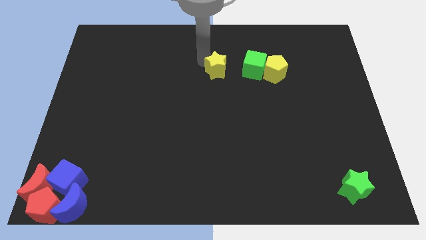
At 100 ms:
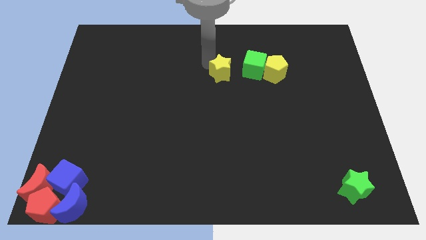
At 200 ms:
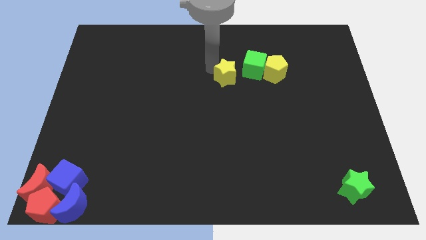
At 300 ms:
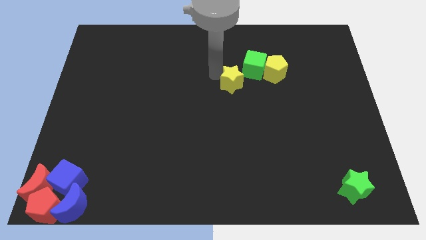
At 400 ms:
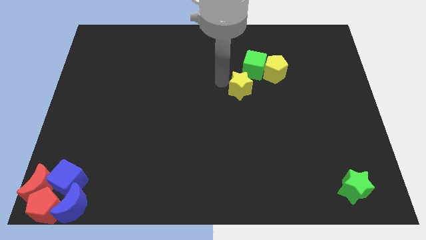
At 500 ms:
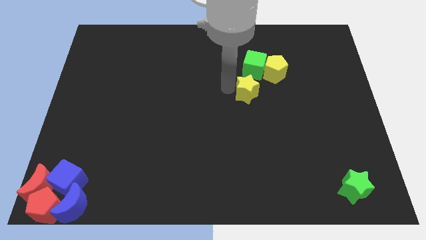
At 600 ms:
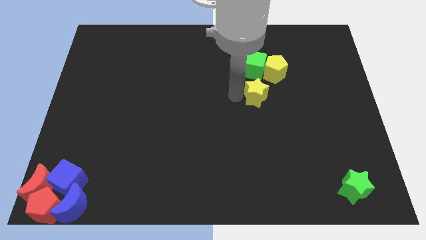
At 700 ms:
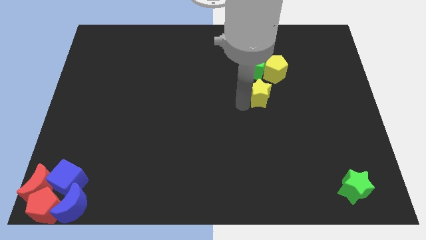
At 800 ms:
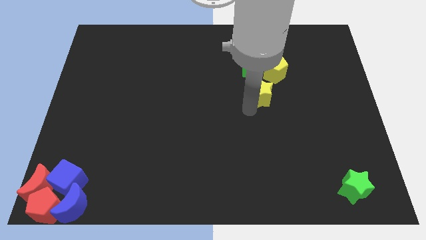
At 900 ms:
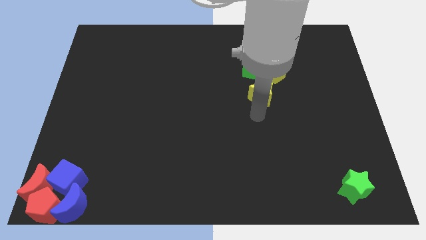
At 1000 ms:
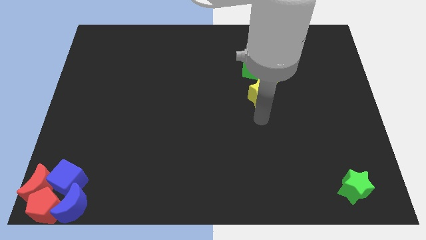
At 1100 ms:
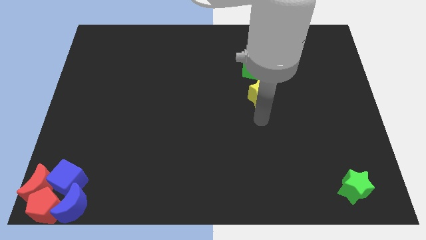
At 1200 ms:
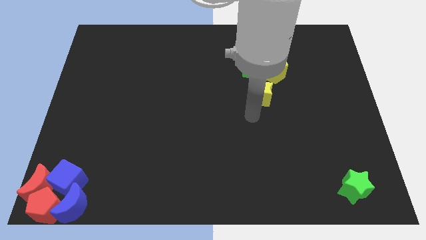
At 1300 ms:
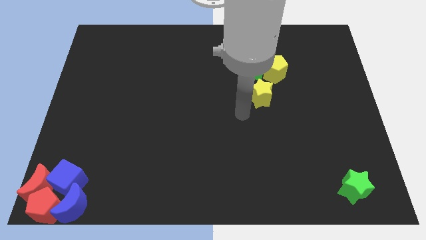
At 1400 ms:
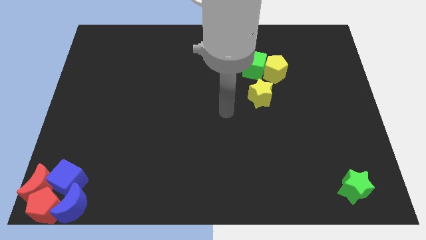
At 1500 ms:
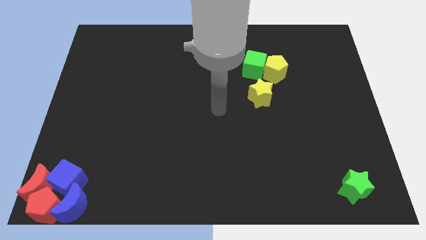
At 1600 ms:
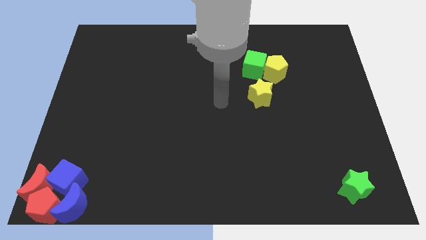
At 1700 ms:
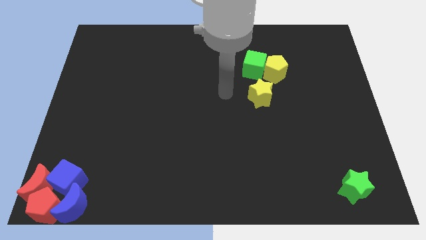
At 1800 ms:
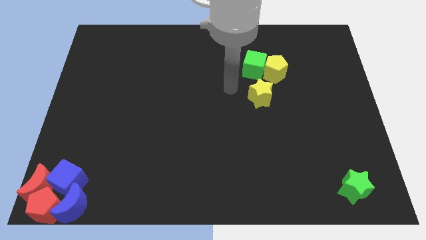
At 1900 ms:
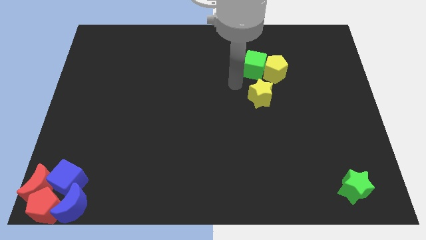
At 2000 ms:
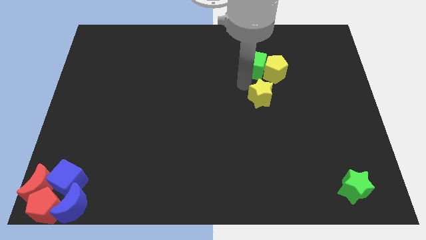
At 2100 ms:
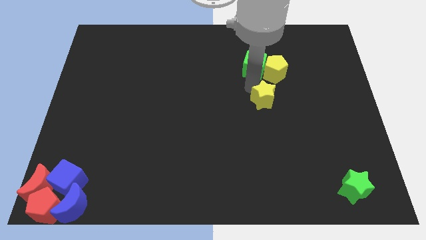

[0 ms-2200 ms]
push the yellow star to the bottom of the board

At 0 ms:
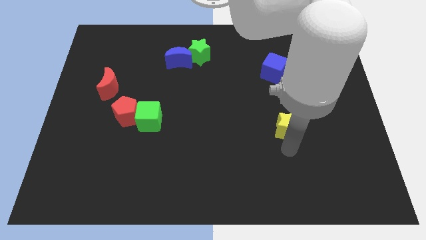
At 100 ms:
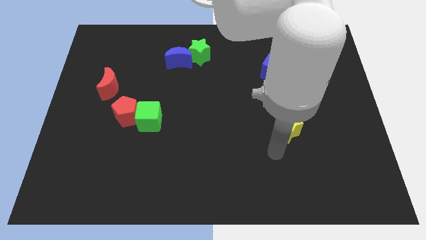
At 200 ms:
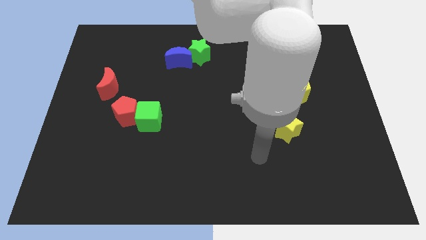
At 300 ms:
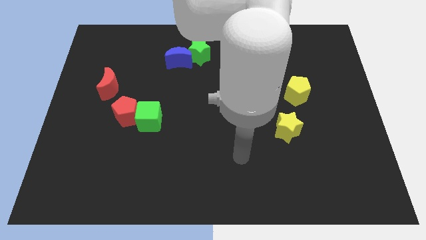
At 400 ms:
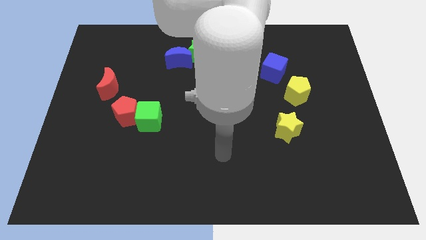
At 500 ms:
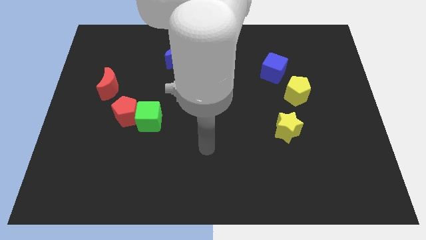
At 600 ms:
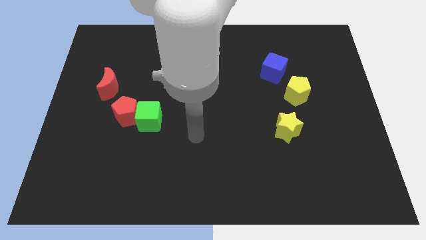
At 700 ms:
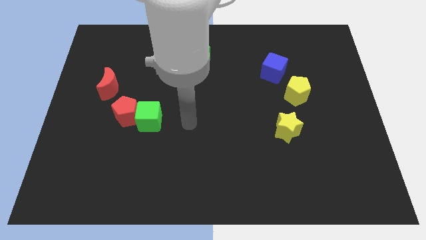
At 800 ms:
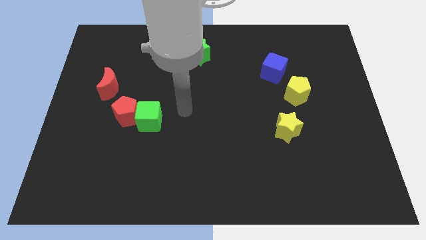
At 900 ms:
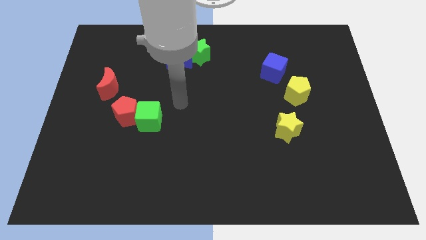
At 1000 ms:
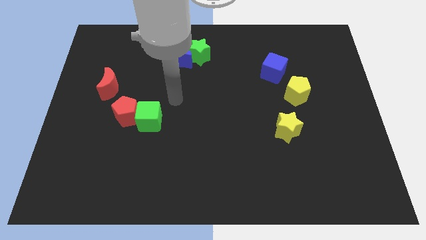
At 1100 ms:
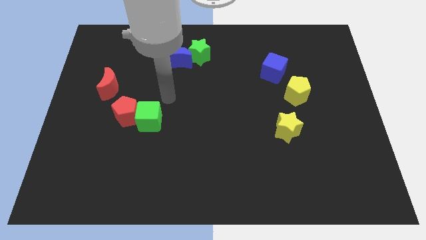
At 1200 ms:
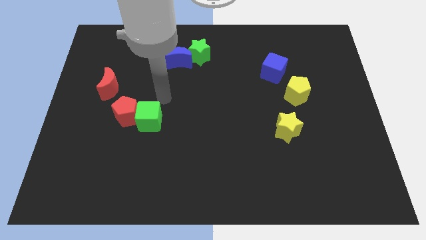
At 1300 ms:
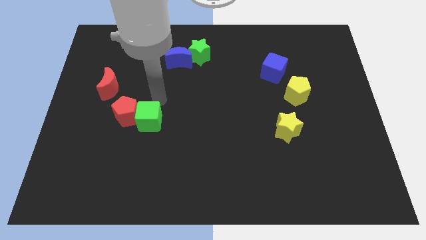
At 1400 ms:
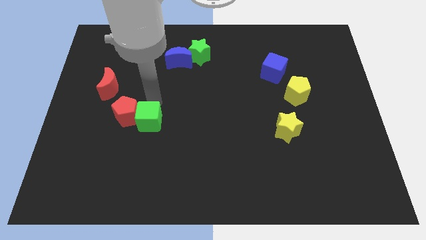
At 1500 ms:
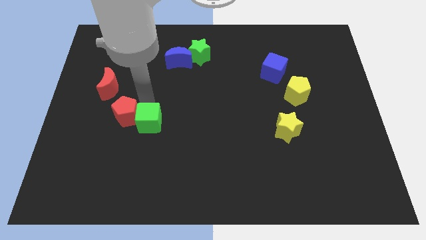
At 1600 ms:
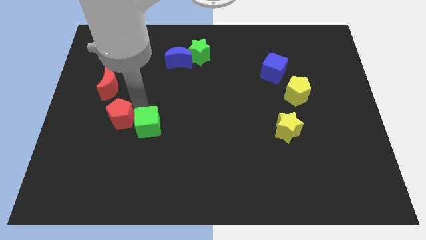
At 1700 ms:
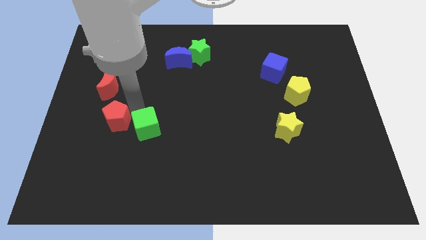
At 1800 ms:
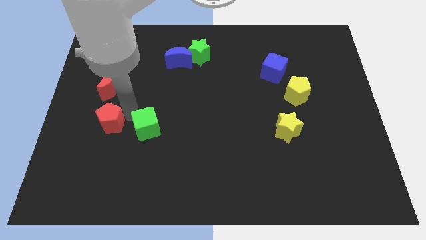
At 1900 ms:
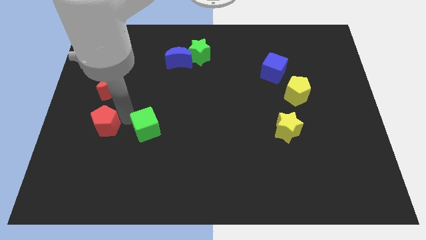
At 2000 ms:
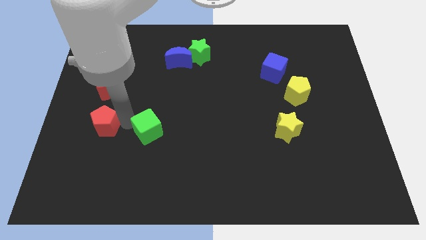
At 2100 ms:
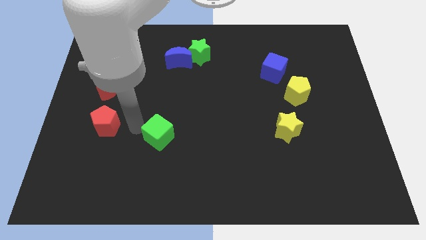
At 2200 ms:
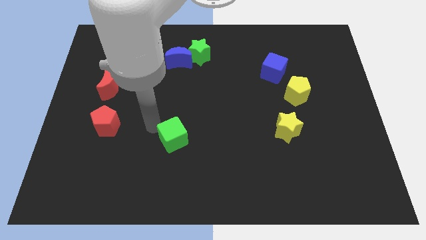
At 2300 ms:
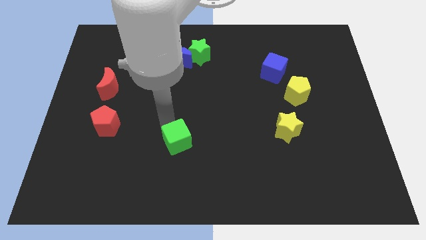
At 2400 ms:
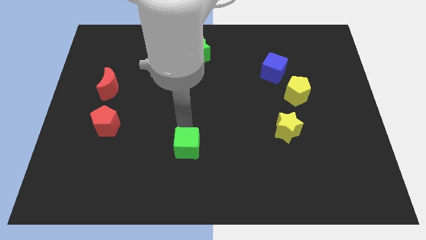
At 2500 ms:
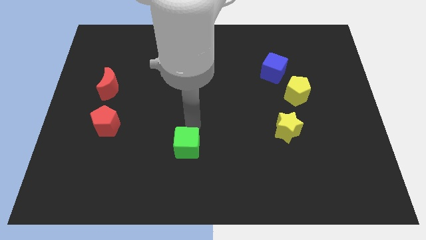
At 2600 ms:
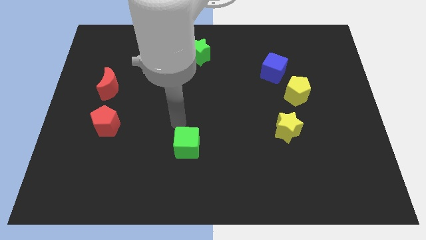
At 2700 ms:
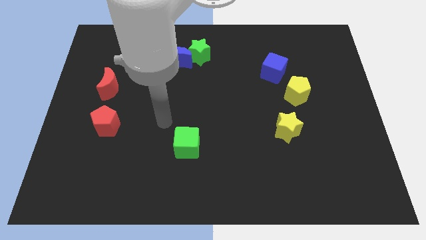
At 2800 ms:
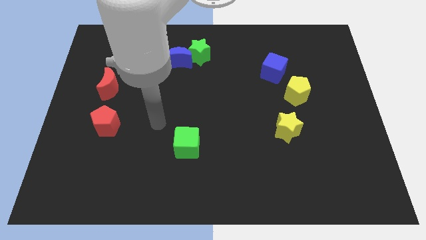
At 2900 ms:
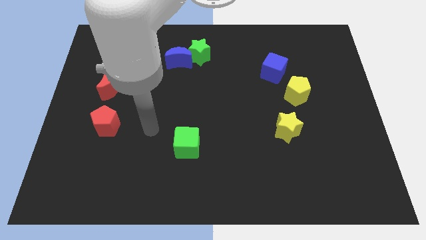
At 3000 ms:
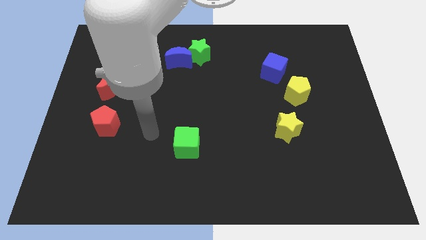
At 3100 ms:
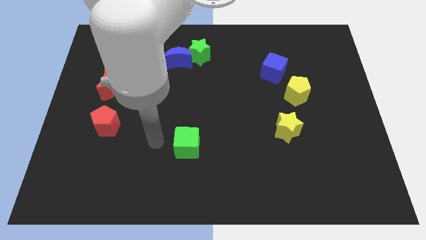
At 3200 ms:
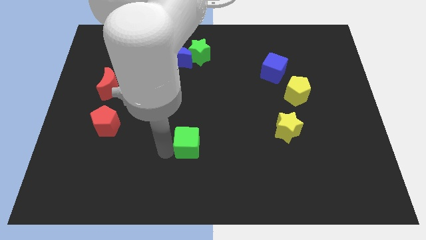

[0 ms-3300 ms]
place the green cube at the bottom side of the blue crescent and the green star

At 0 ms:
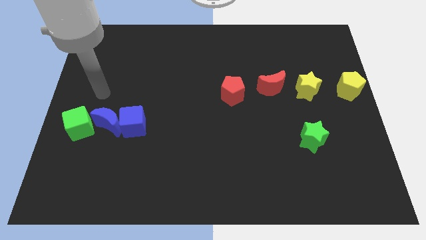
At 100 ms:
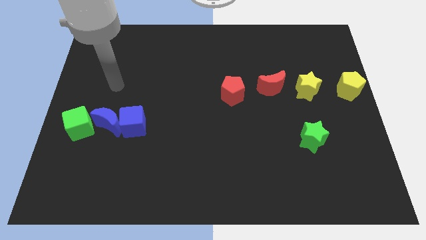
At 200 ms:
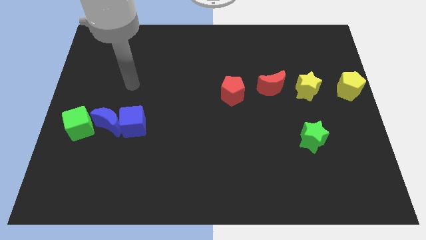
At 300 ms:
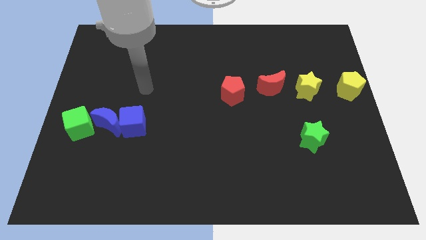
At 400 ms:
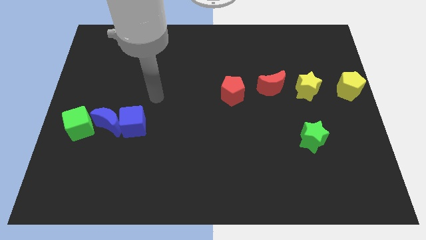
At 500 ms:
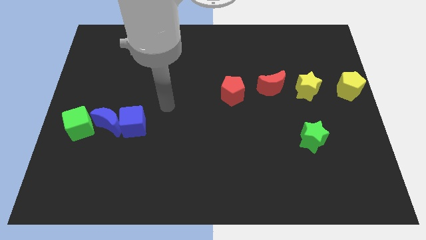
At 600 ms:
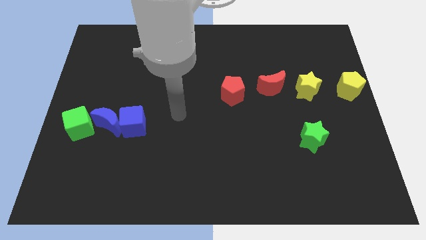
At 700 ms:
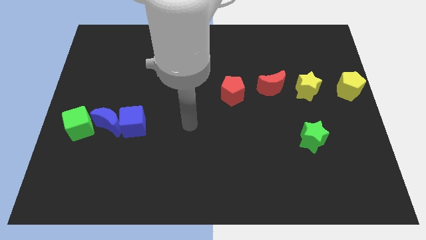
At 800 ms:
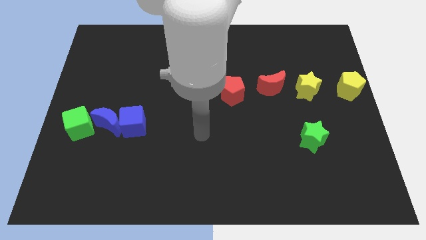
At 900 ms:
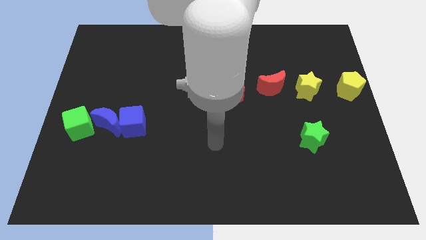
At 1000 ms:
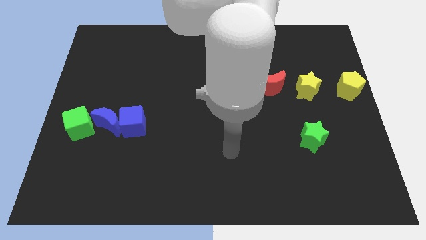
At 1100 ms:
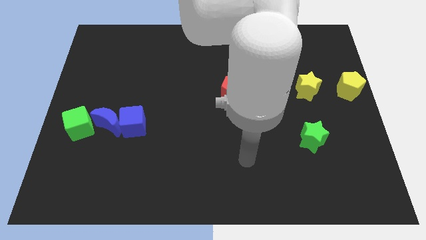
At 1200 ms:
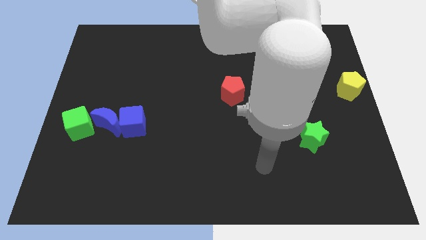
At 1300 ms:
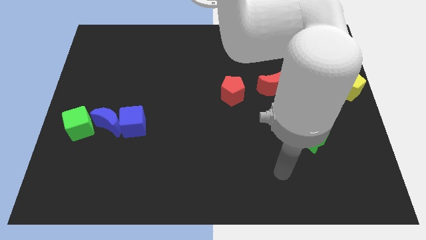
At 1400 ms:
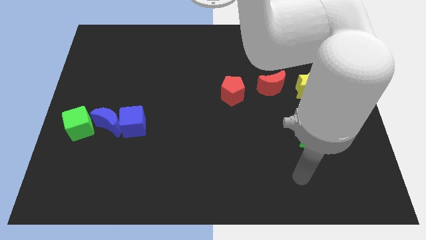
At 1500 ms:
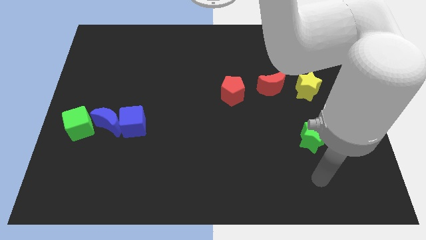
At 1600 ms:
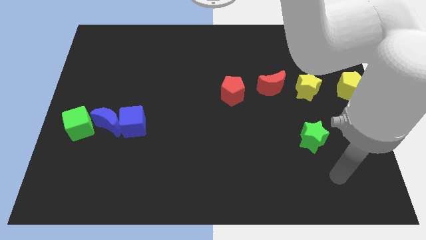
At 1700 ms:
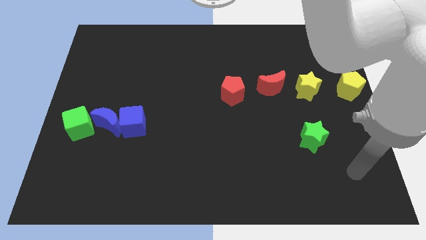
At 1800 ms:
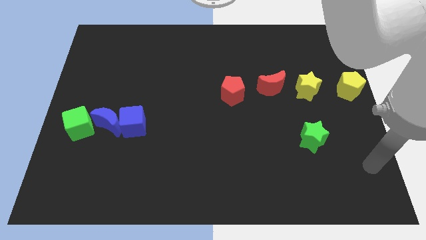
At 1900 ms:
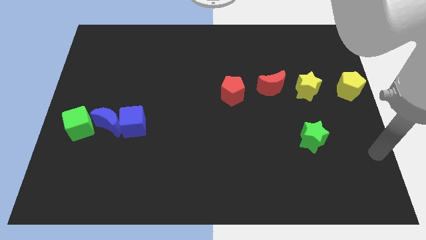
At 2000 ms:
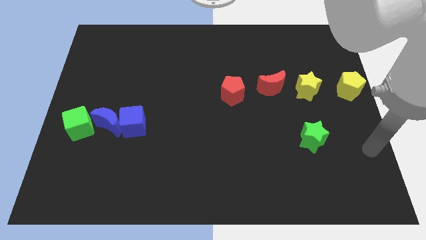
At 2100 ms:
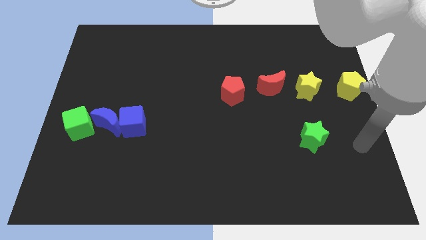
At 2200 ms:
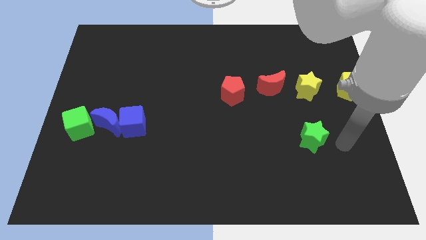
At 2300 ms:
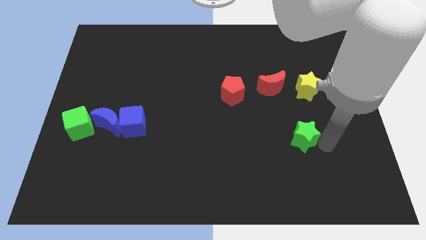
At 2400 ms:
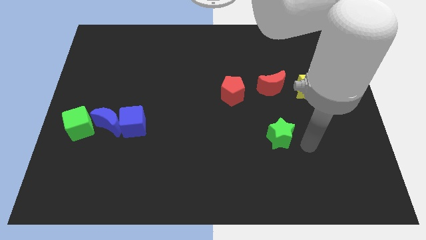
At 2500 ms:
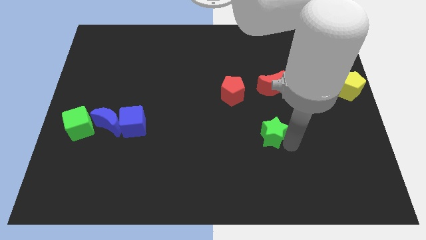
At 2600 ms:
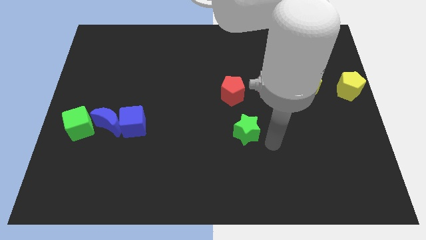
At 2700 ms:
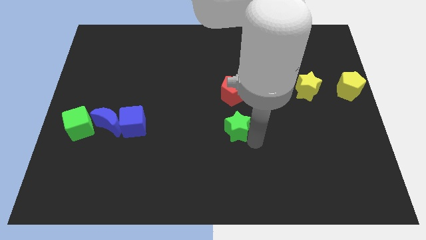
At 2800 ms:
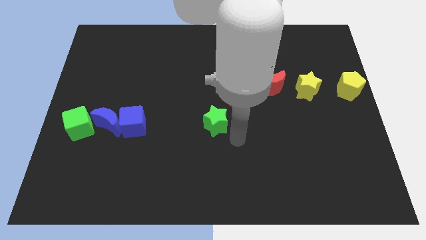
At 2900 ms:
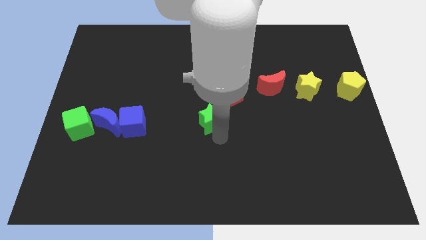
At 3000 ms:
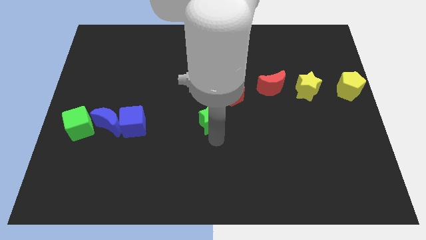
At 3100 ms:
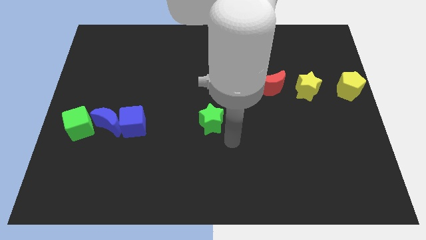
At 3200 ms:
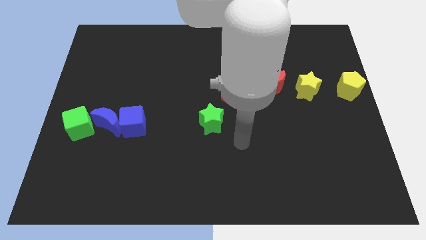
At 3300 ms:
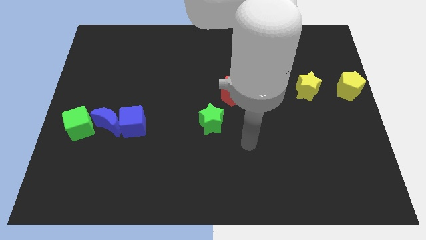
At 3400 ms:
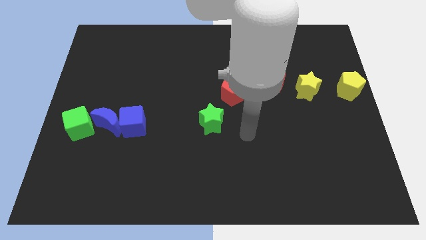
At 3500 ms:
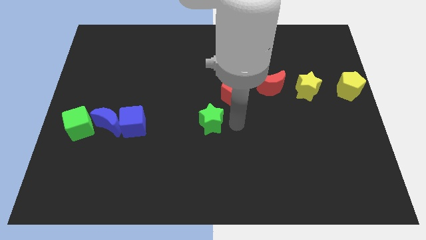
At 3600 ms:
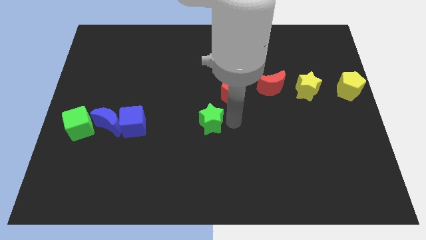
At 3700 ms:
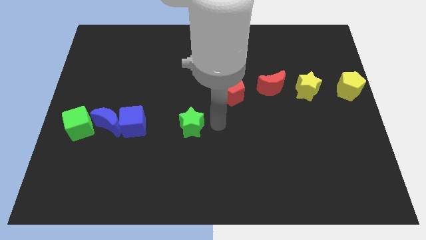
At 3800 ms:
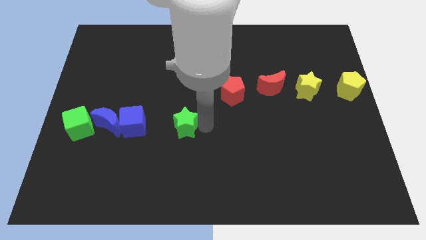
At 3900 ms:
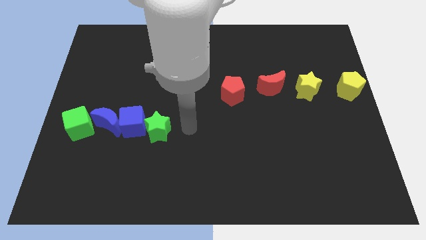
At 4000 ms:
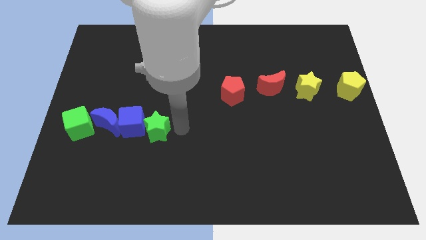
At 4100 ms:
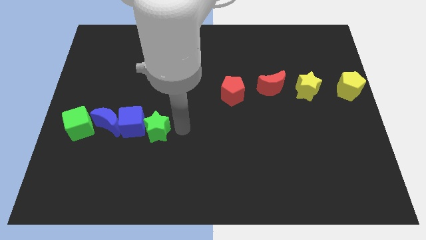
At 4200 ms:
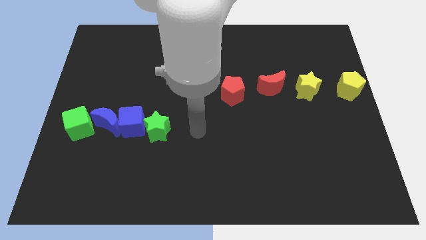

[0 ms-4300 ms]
place the green star near the right side of blue cube
